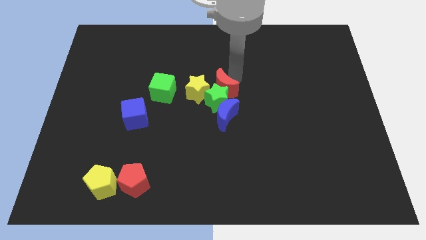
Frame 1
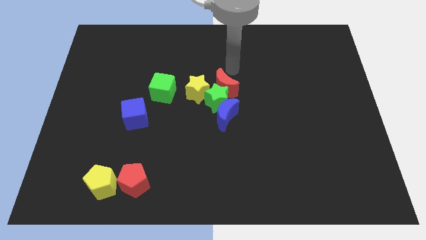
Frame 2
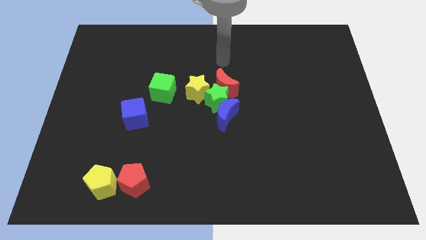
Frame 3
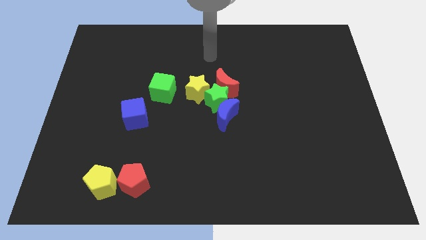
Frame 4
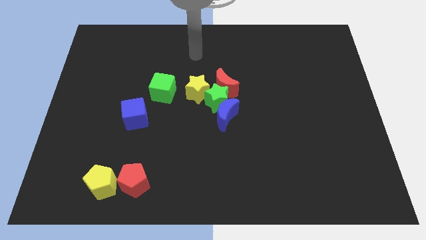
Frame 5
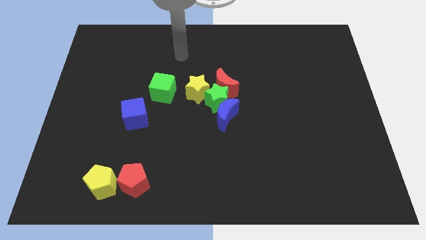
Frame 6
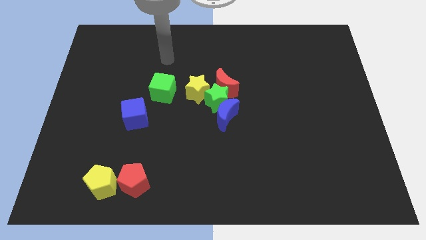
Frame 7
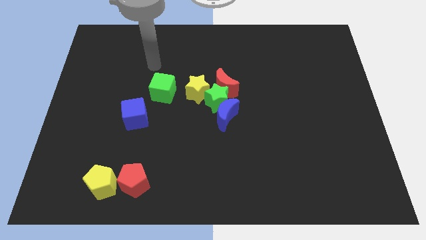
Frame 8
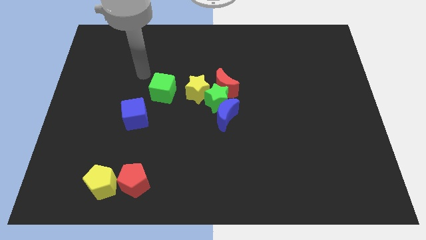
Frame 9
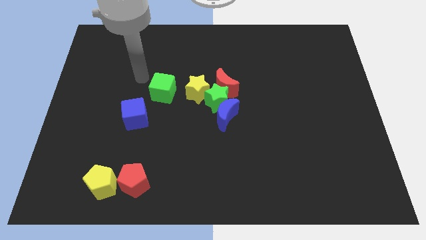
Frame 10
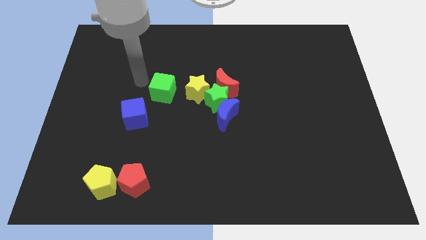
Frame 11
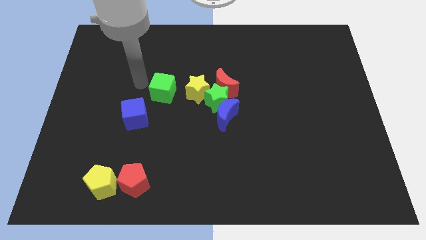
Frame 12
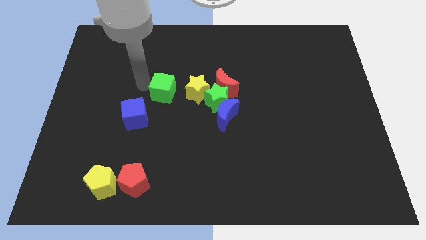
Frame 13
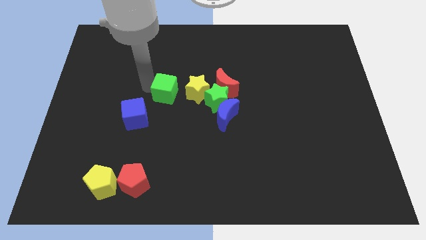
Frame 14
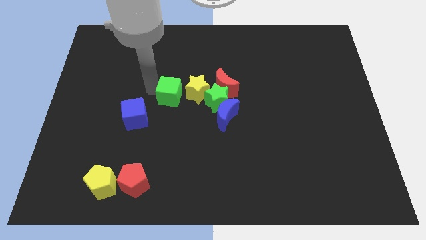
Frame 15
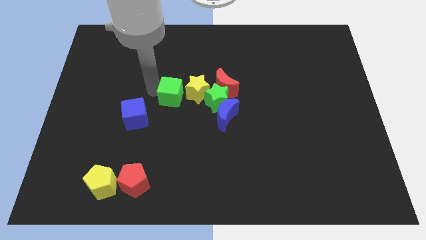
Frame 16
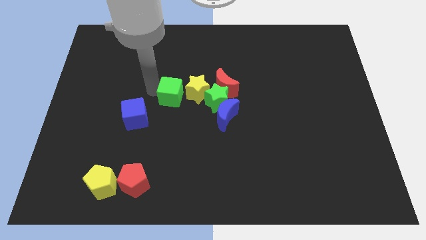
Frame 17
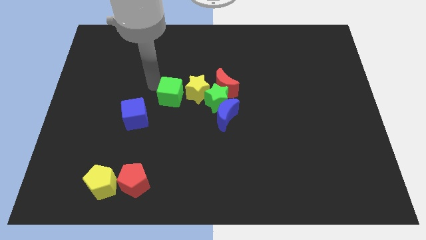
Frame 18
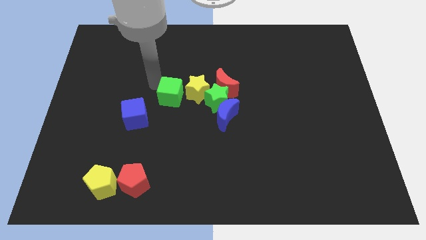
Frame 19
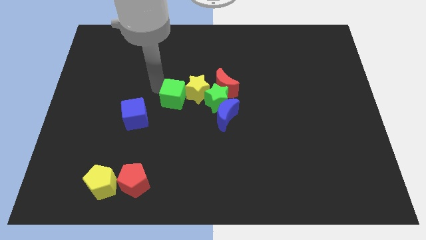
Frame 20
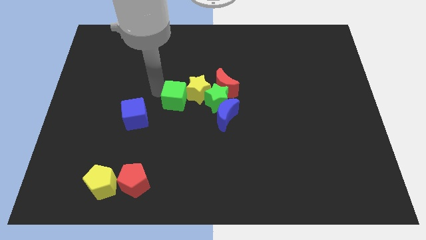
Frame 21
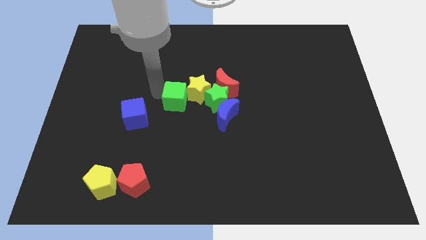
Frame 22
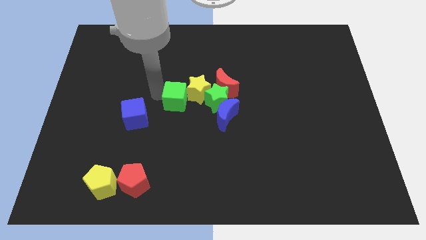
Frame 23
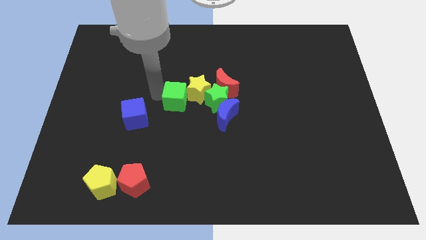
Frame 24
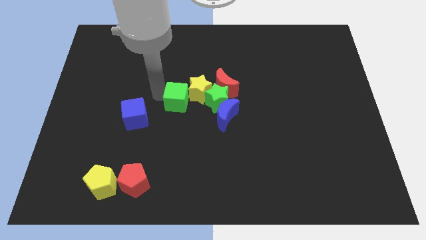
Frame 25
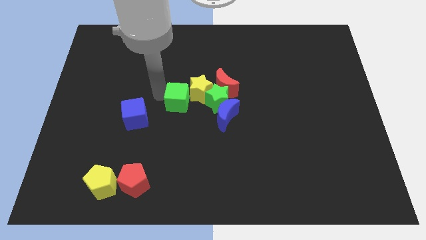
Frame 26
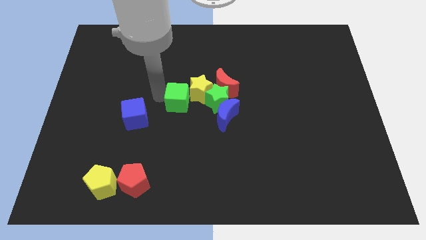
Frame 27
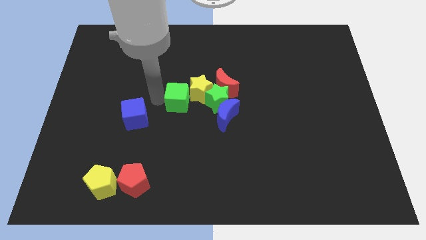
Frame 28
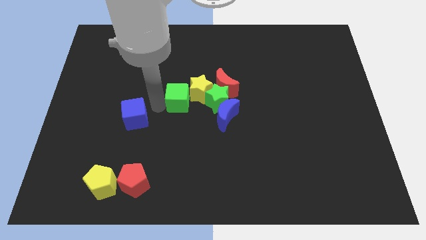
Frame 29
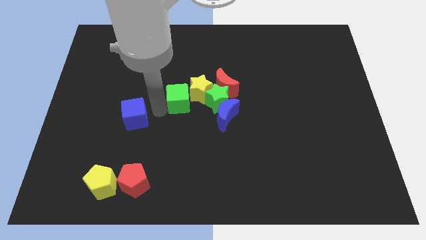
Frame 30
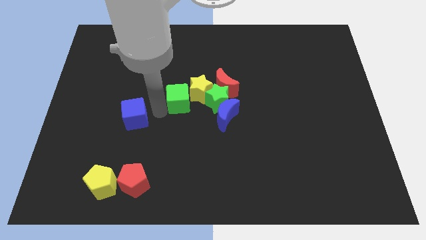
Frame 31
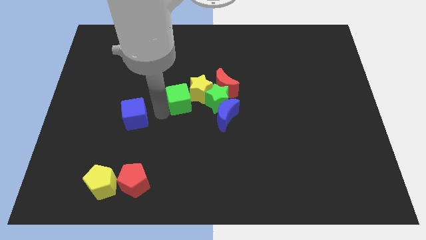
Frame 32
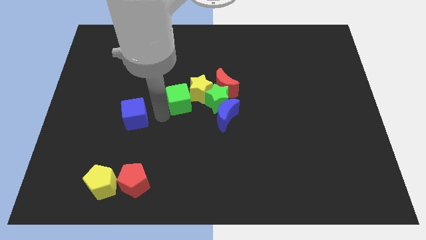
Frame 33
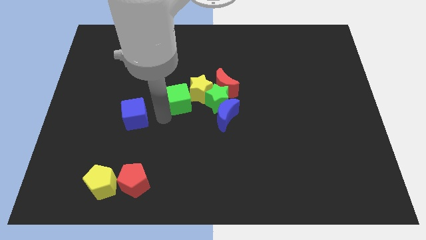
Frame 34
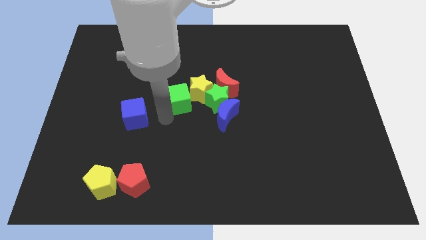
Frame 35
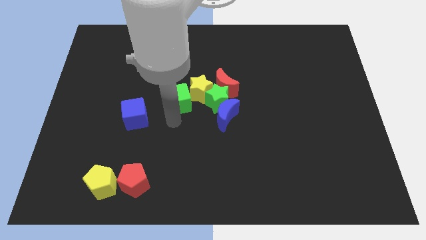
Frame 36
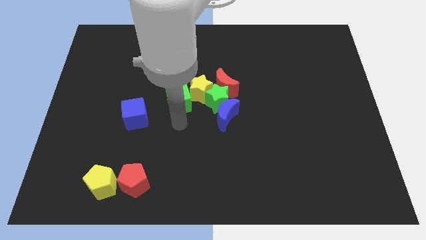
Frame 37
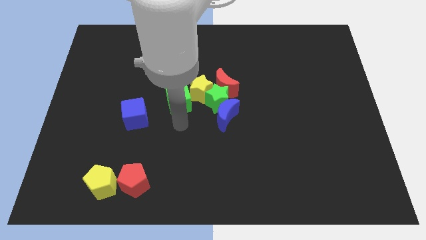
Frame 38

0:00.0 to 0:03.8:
place the green cube on the left side of yellow star

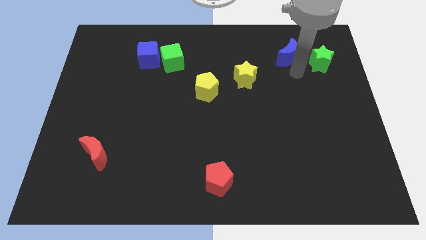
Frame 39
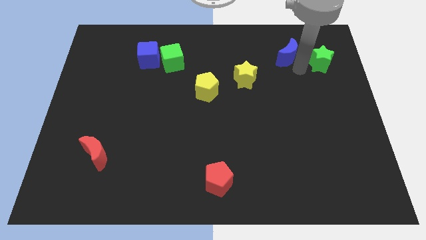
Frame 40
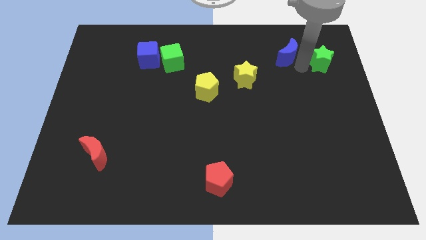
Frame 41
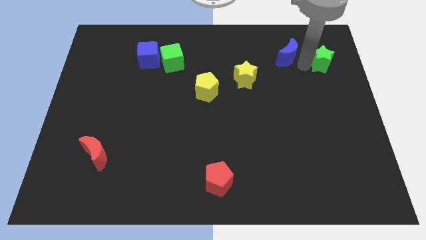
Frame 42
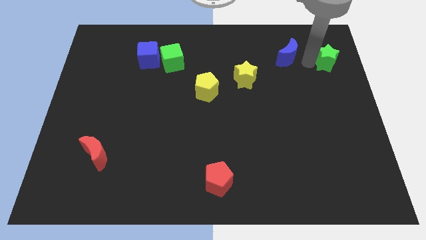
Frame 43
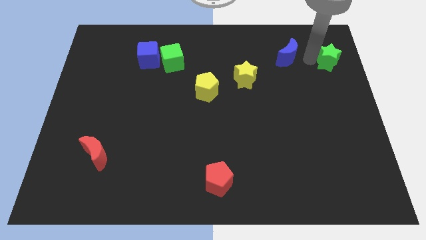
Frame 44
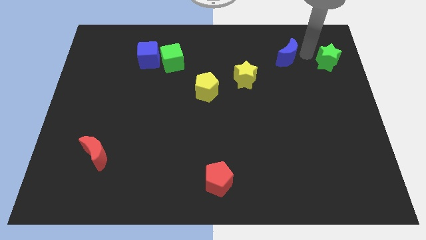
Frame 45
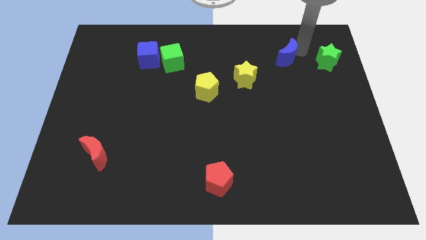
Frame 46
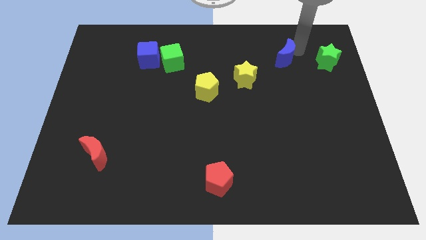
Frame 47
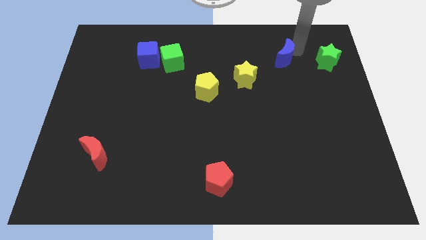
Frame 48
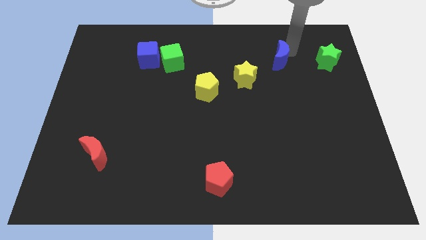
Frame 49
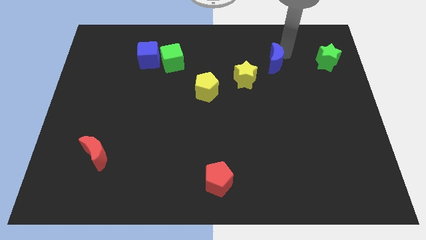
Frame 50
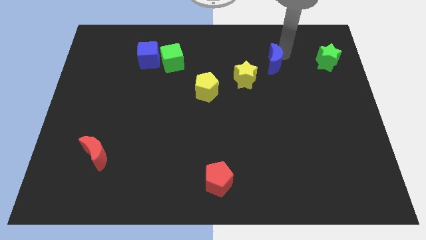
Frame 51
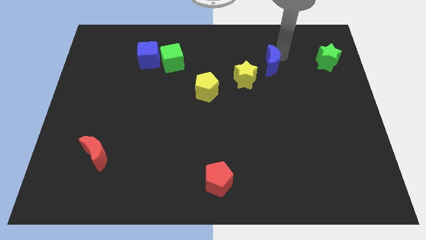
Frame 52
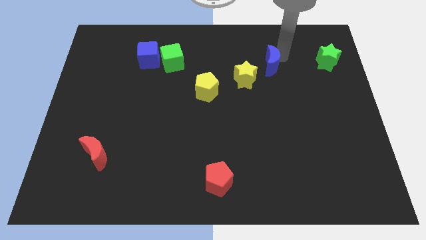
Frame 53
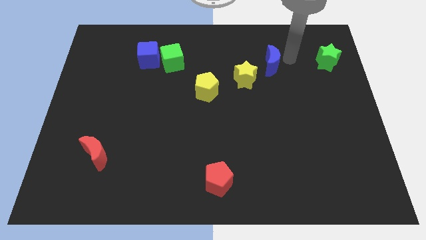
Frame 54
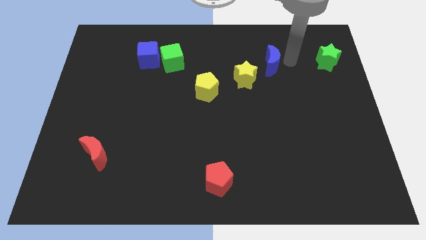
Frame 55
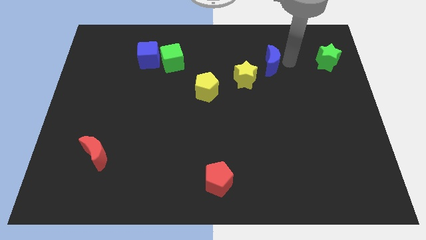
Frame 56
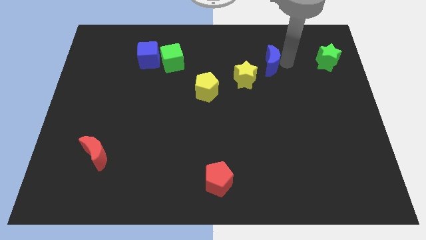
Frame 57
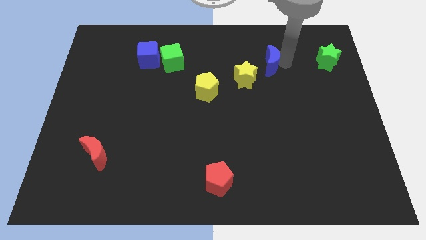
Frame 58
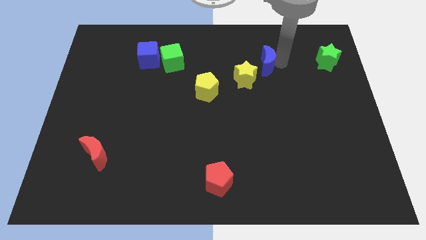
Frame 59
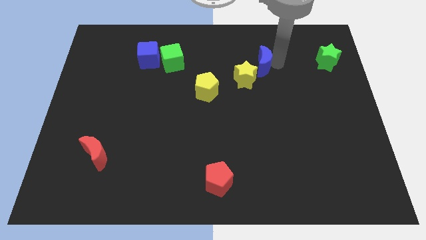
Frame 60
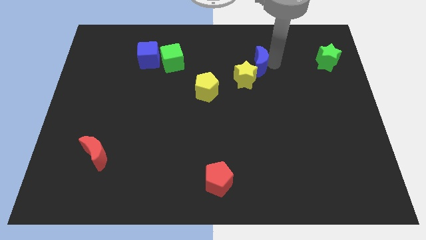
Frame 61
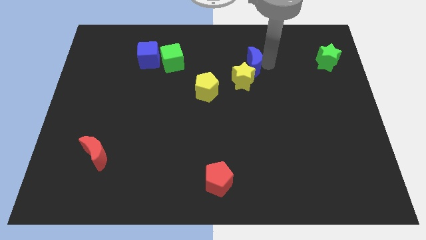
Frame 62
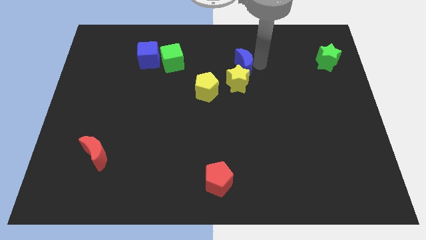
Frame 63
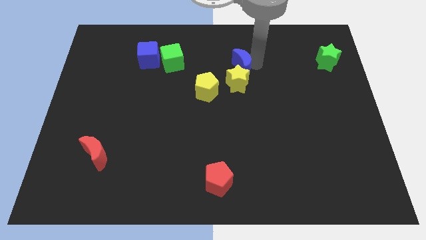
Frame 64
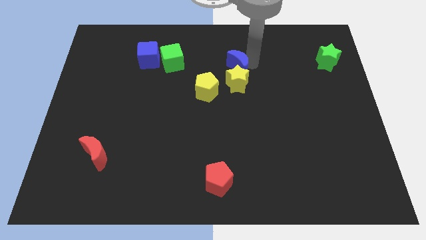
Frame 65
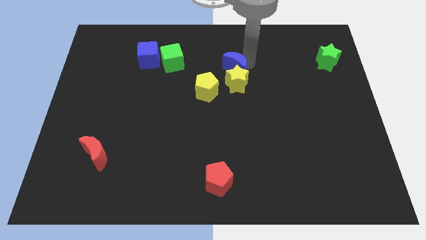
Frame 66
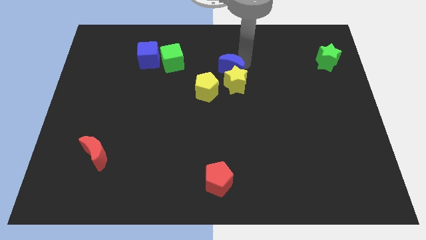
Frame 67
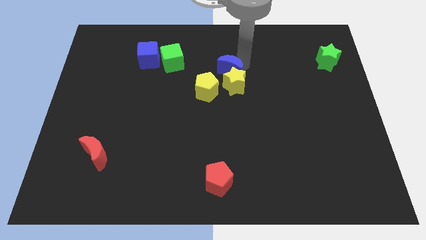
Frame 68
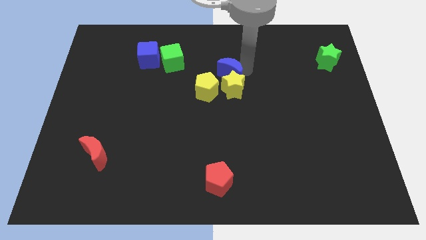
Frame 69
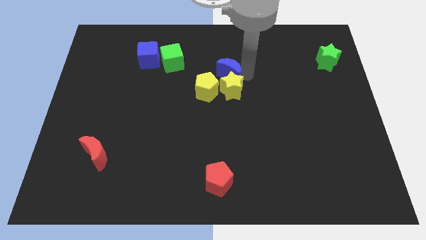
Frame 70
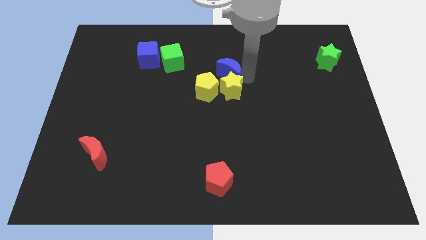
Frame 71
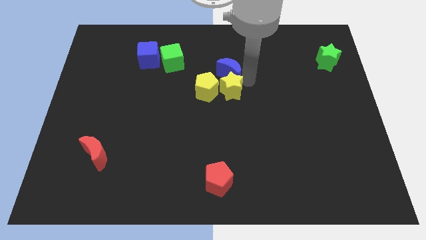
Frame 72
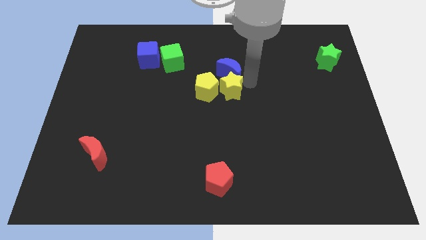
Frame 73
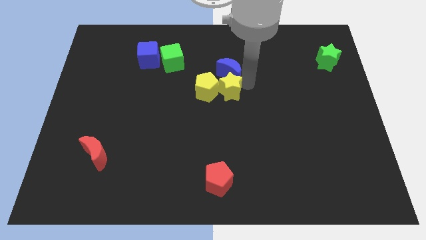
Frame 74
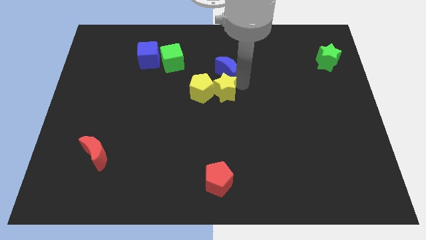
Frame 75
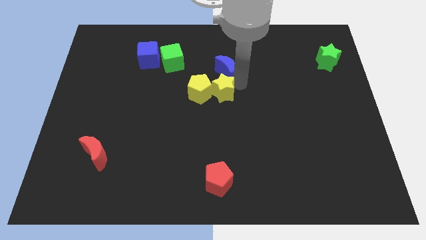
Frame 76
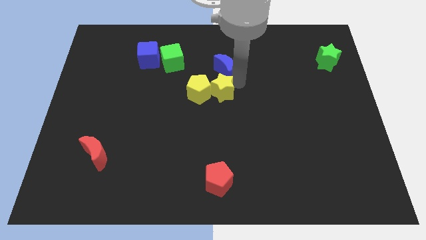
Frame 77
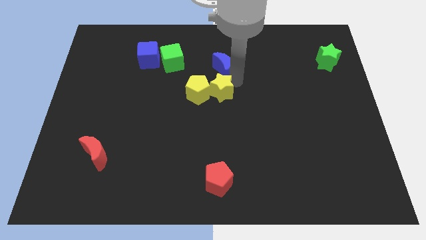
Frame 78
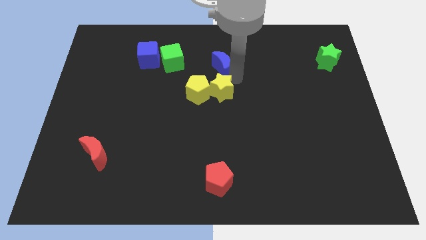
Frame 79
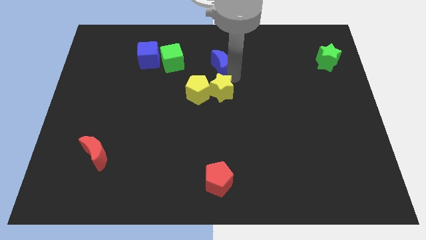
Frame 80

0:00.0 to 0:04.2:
place the blue moon above the yellow star

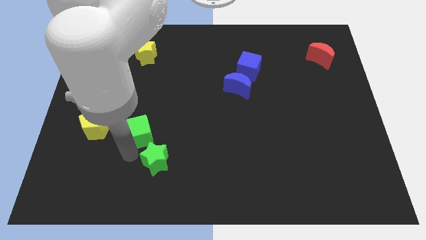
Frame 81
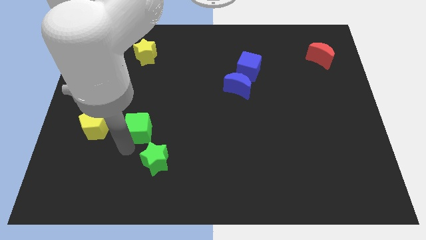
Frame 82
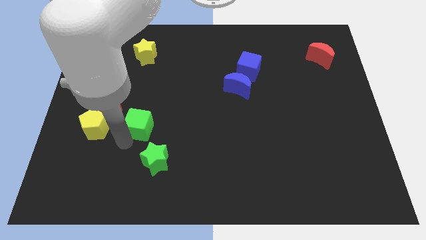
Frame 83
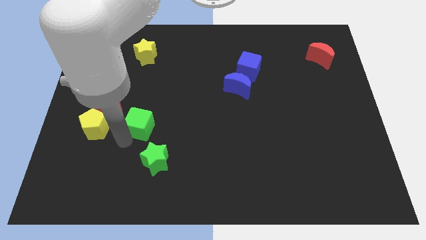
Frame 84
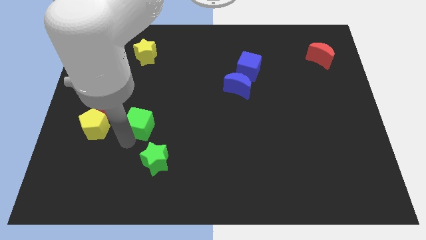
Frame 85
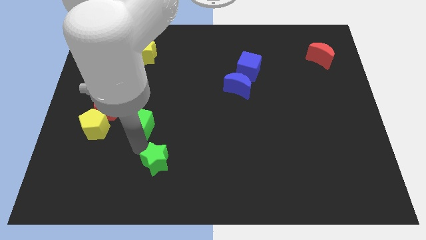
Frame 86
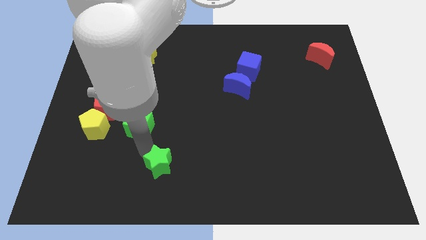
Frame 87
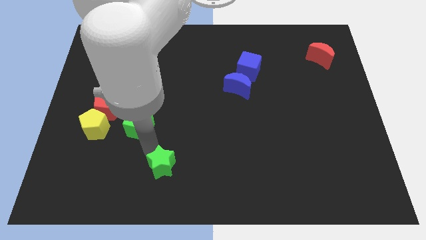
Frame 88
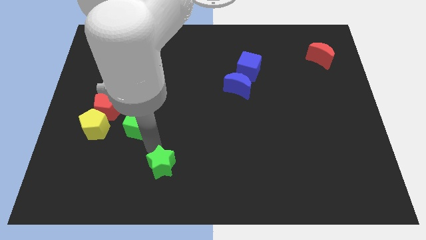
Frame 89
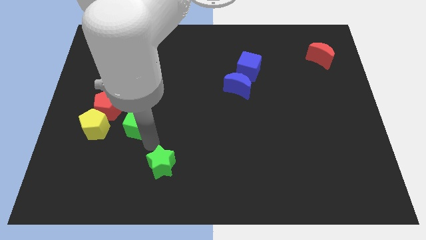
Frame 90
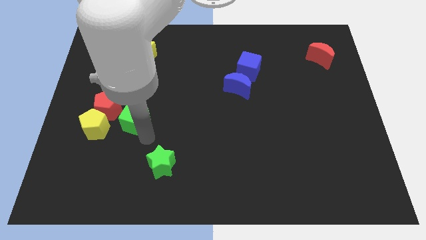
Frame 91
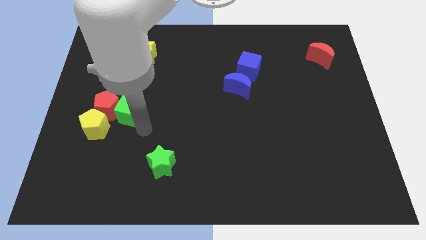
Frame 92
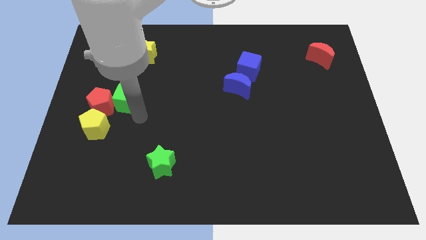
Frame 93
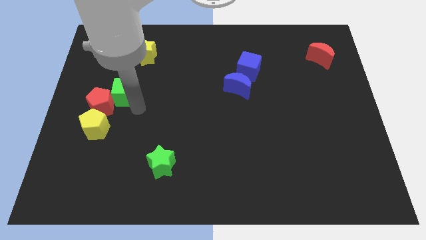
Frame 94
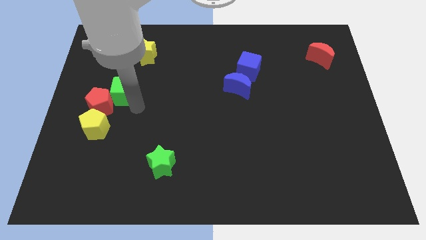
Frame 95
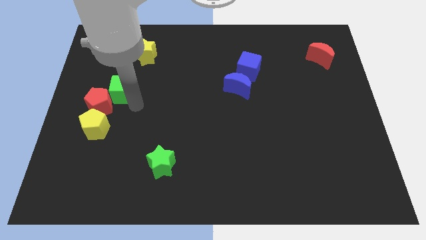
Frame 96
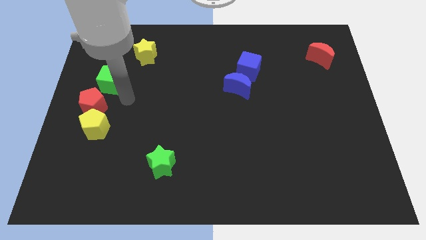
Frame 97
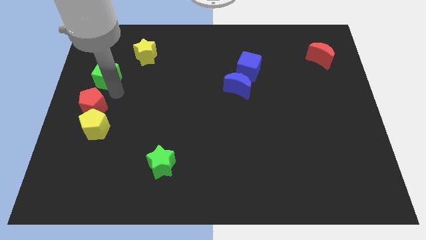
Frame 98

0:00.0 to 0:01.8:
separate the green cube to the top red pentagon
